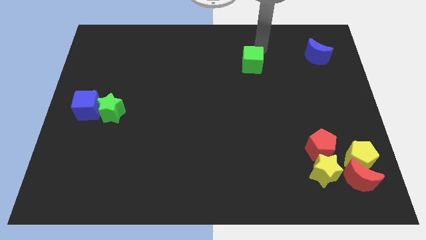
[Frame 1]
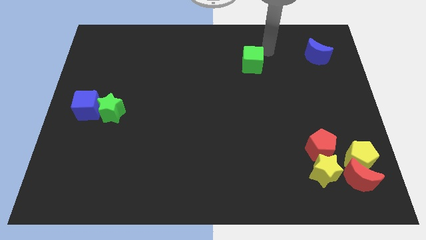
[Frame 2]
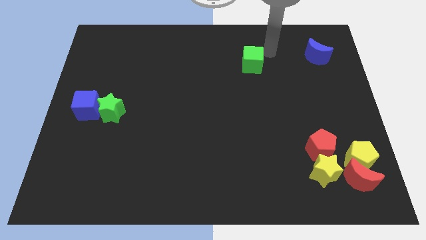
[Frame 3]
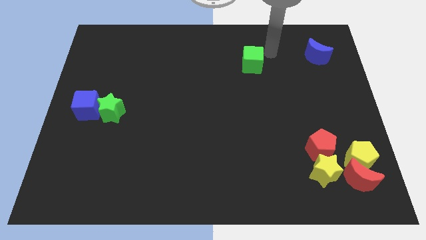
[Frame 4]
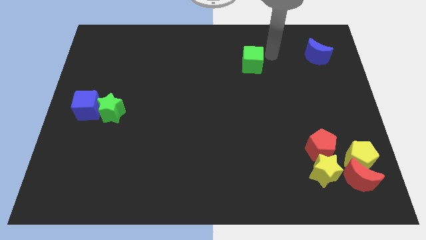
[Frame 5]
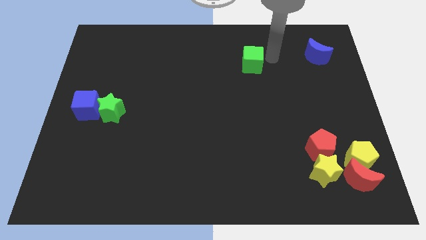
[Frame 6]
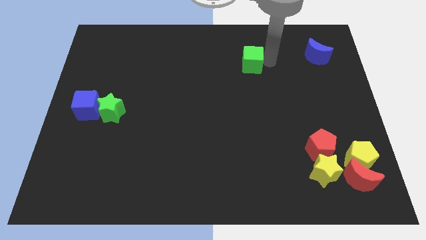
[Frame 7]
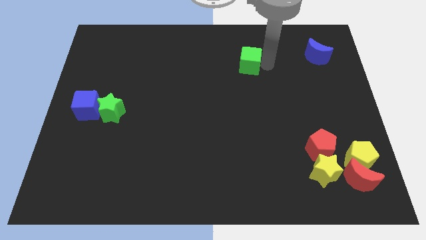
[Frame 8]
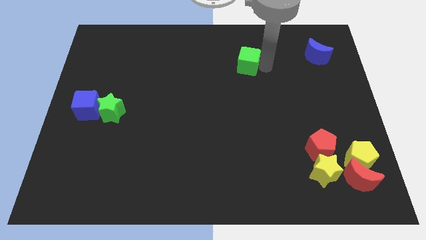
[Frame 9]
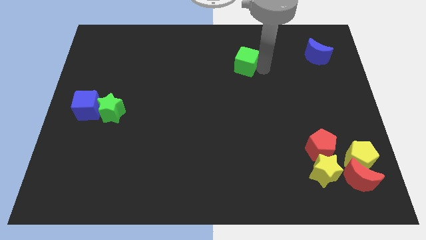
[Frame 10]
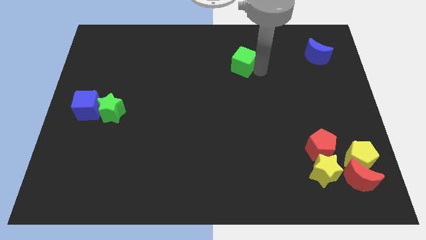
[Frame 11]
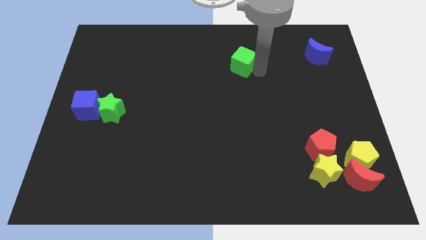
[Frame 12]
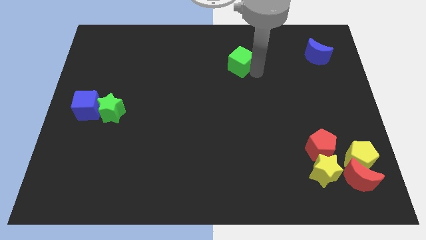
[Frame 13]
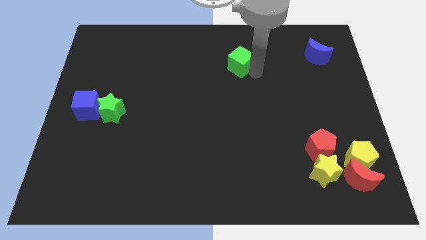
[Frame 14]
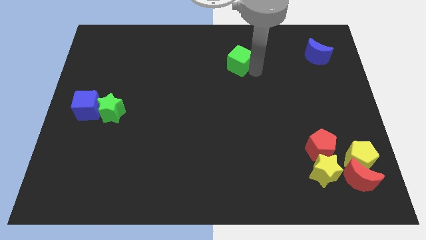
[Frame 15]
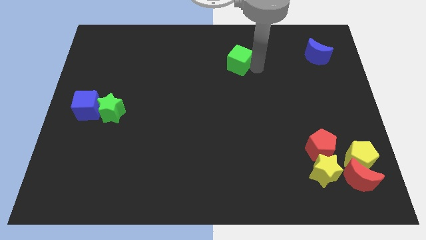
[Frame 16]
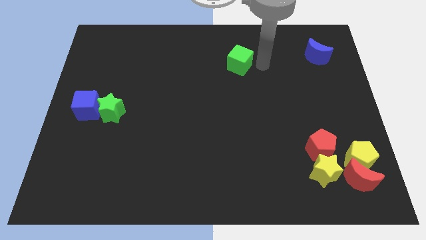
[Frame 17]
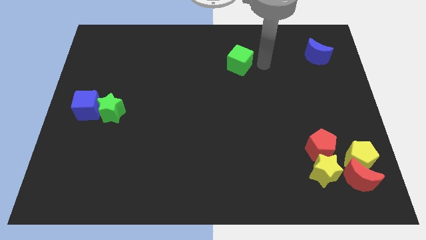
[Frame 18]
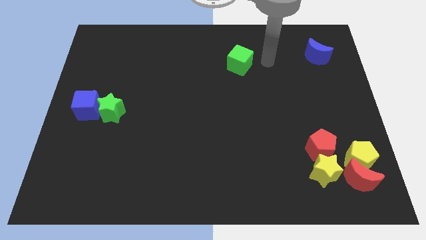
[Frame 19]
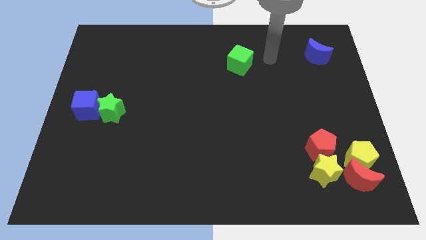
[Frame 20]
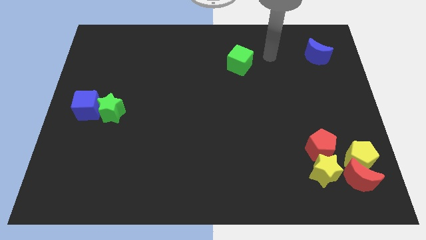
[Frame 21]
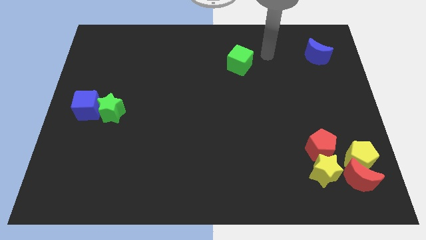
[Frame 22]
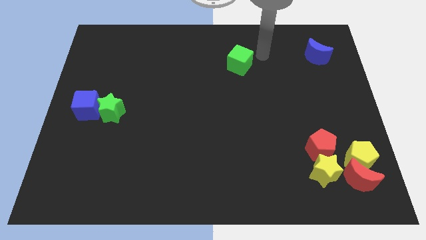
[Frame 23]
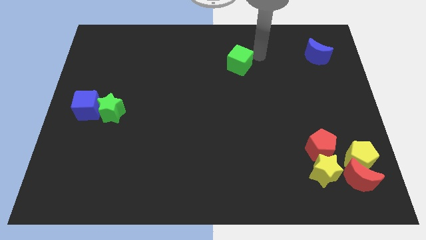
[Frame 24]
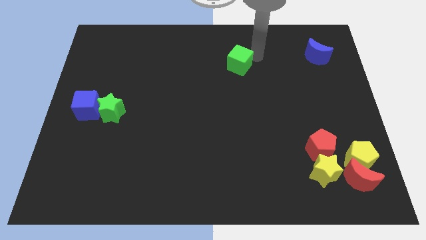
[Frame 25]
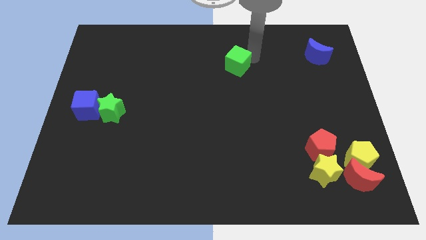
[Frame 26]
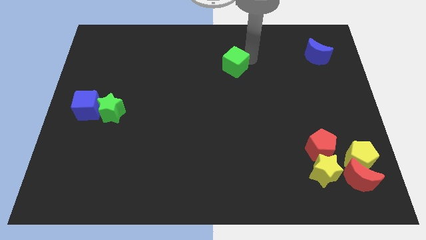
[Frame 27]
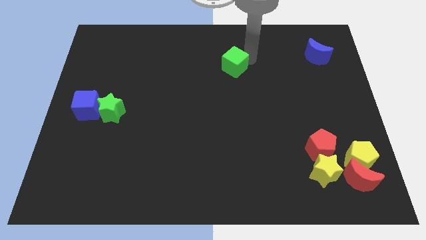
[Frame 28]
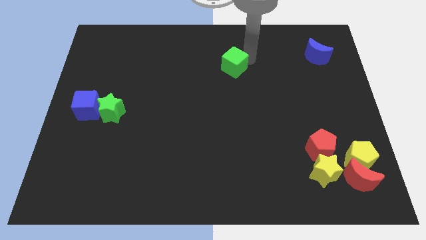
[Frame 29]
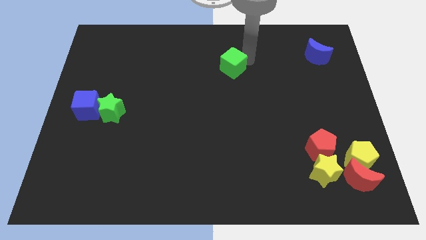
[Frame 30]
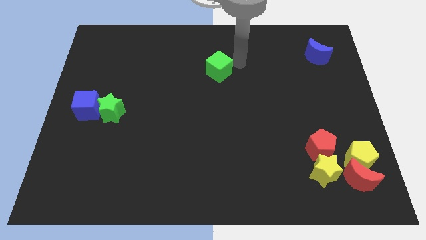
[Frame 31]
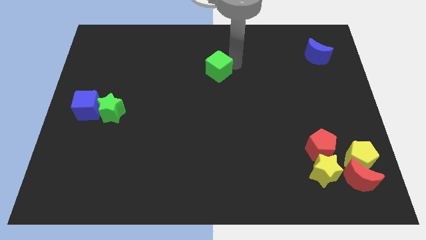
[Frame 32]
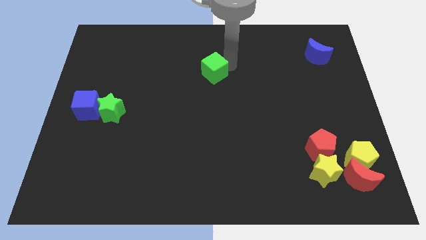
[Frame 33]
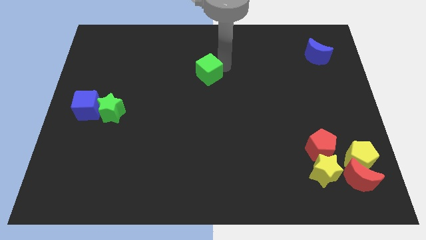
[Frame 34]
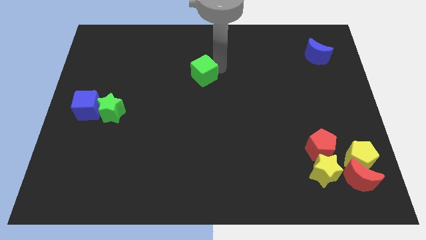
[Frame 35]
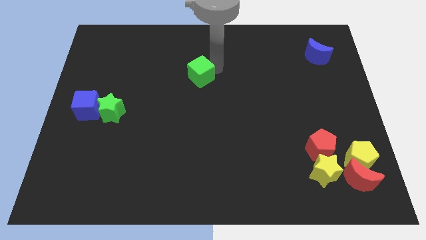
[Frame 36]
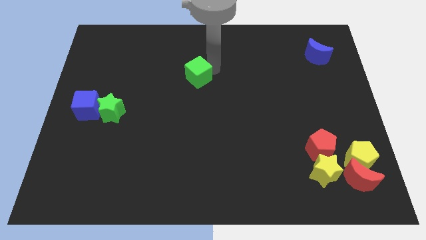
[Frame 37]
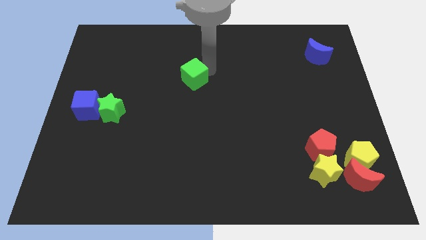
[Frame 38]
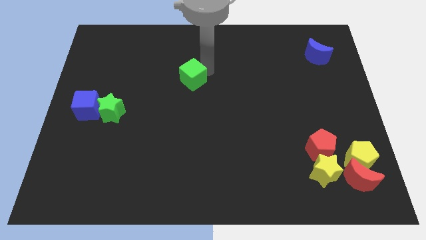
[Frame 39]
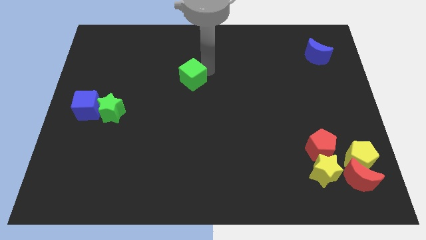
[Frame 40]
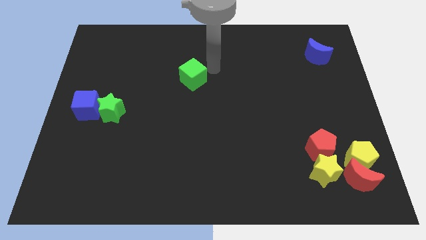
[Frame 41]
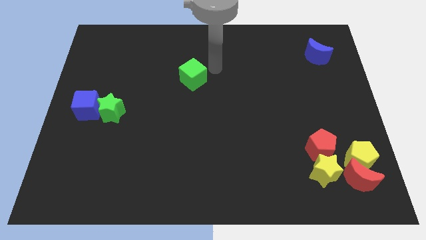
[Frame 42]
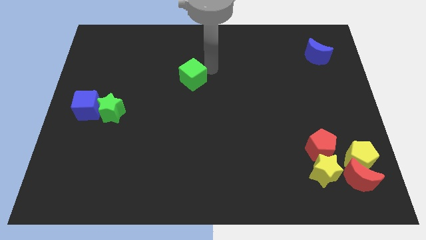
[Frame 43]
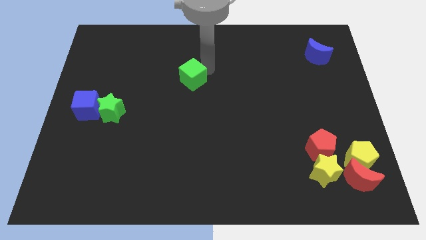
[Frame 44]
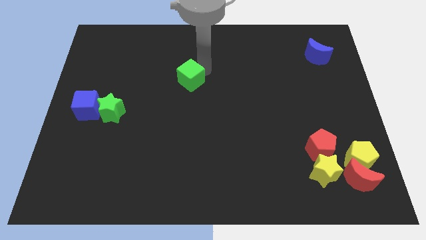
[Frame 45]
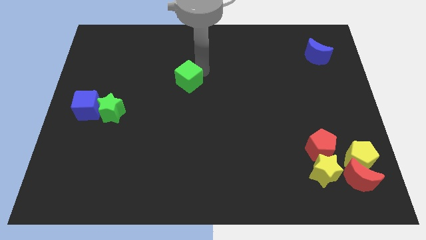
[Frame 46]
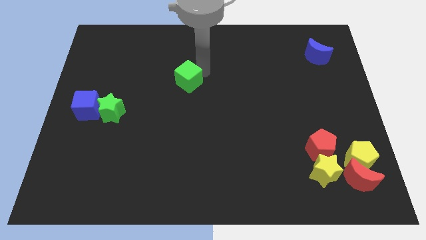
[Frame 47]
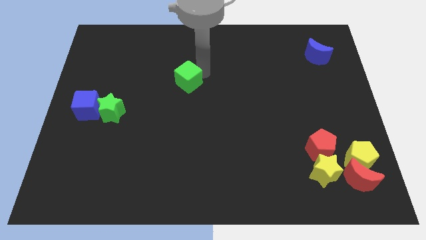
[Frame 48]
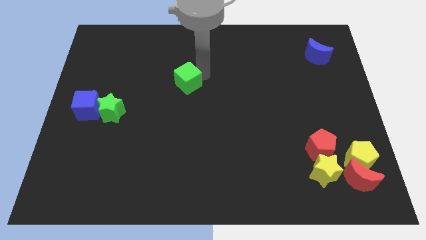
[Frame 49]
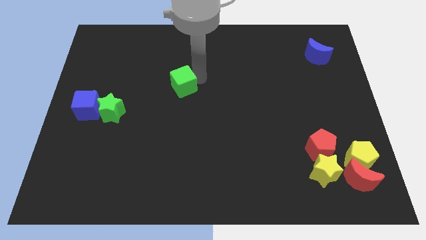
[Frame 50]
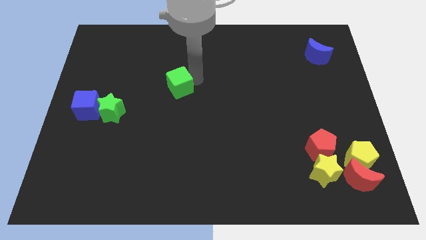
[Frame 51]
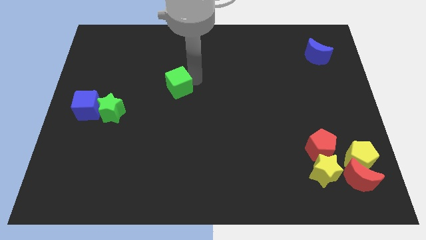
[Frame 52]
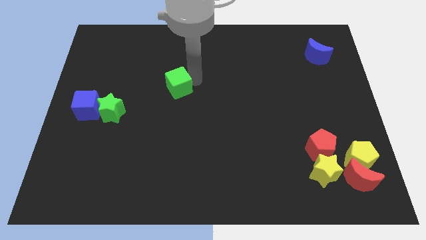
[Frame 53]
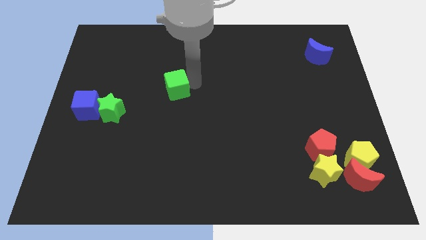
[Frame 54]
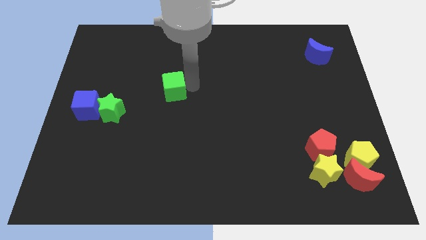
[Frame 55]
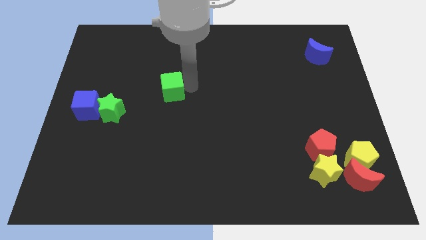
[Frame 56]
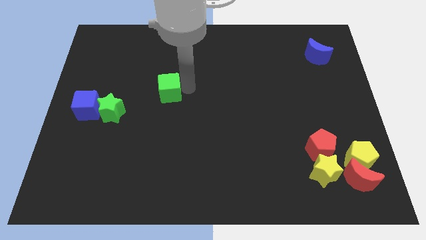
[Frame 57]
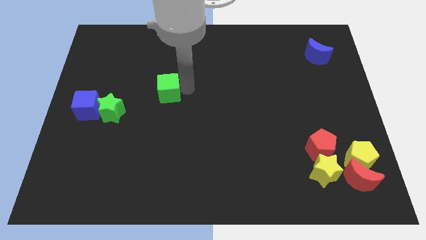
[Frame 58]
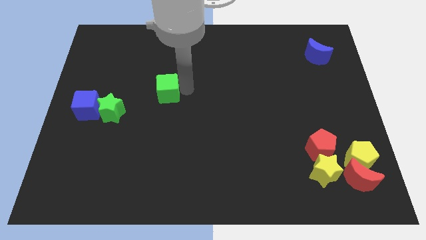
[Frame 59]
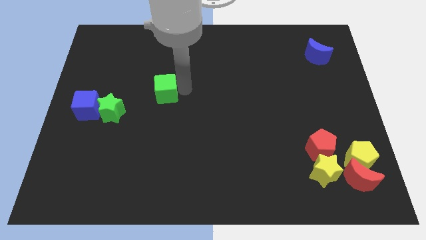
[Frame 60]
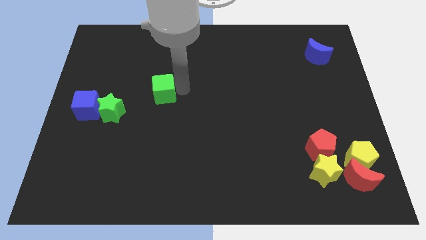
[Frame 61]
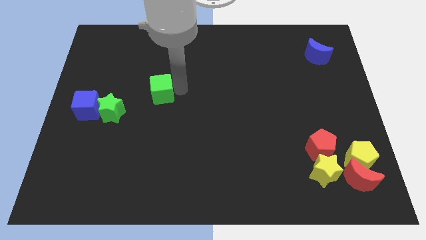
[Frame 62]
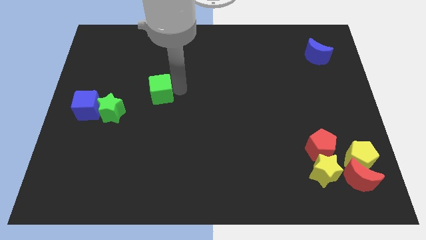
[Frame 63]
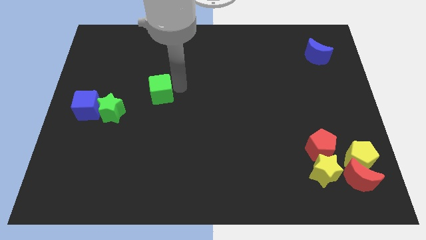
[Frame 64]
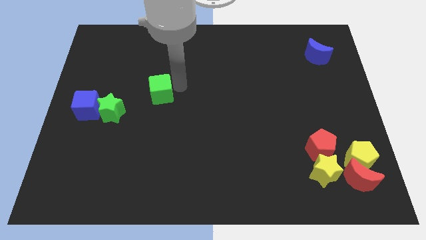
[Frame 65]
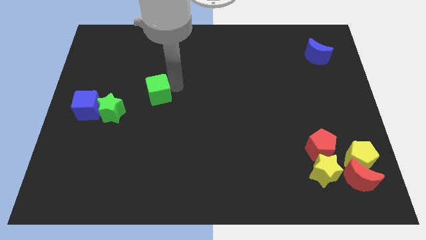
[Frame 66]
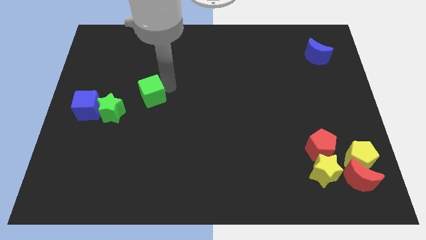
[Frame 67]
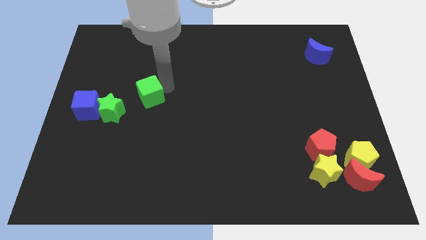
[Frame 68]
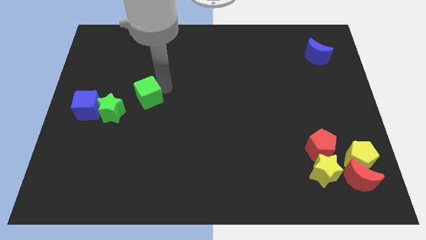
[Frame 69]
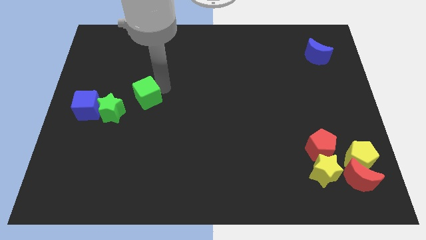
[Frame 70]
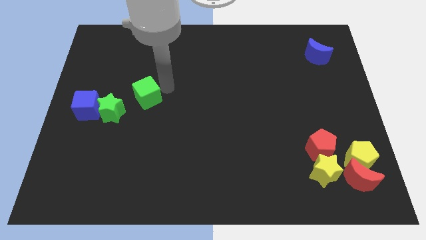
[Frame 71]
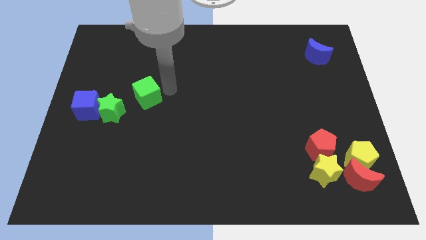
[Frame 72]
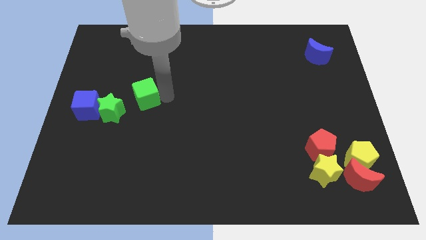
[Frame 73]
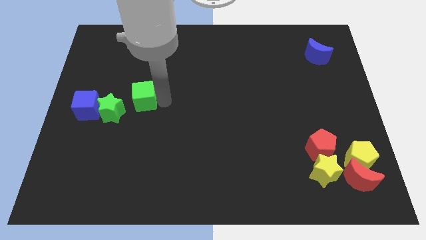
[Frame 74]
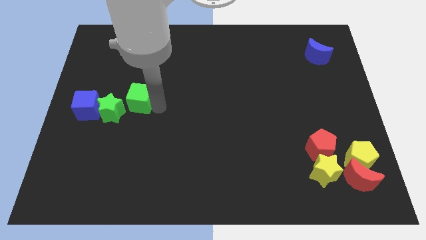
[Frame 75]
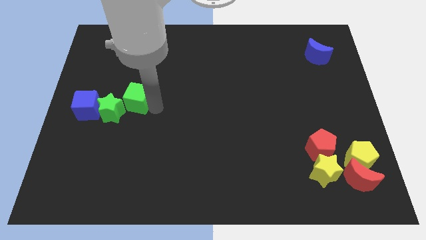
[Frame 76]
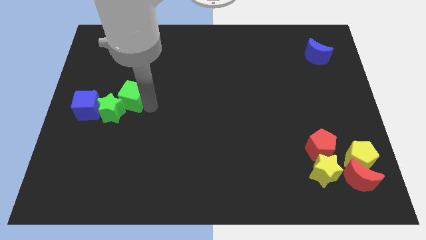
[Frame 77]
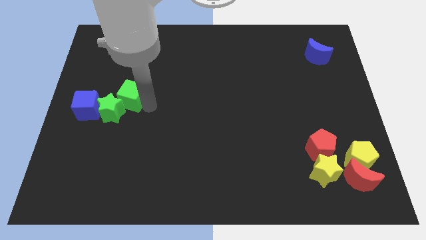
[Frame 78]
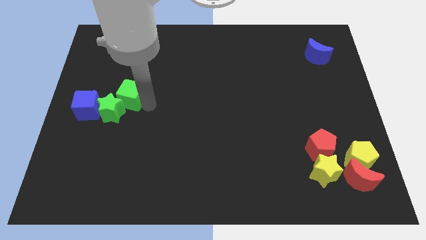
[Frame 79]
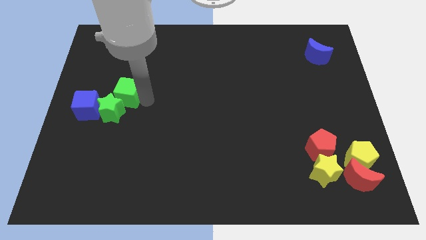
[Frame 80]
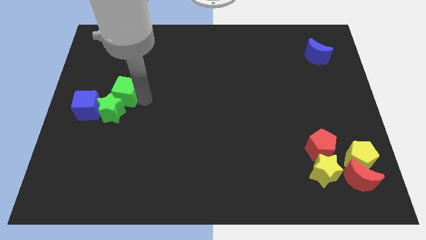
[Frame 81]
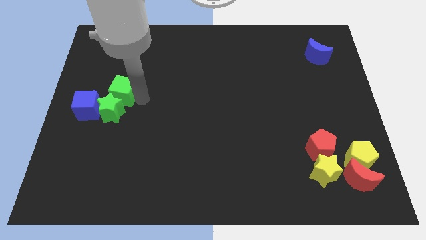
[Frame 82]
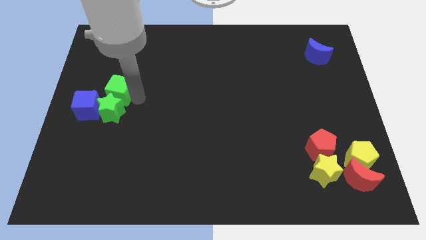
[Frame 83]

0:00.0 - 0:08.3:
move green cube to the top of green star

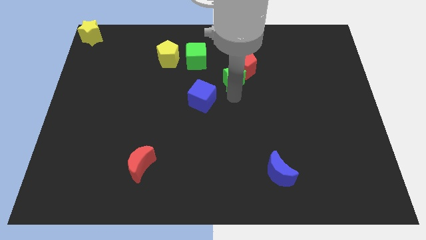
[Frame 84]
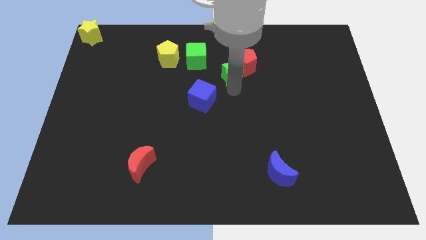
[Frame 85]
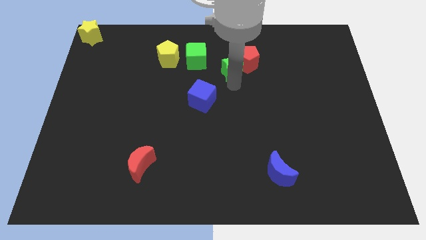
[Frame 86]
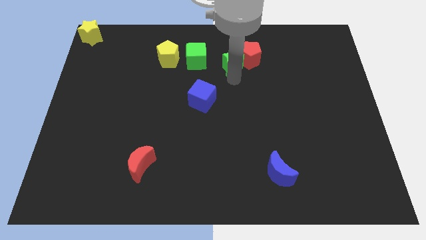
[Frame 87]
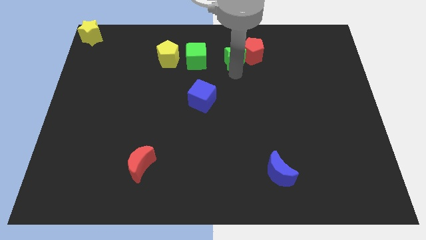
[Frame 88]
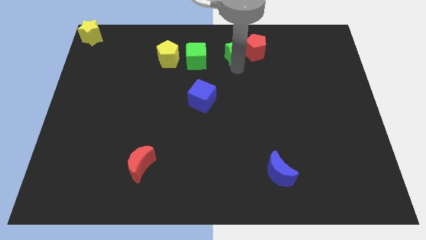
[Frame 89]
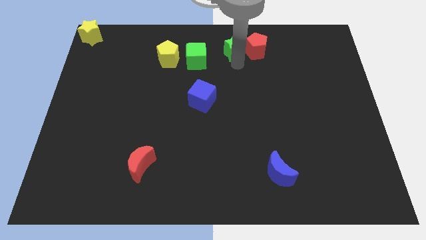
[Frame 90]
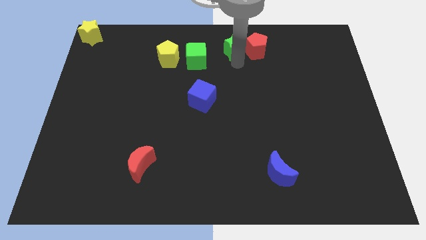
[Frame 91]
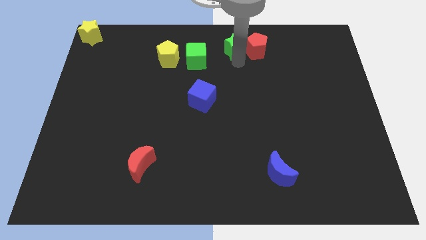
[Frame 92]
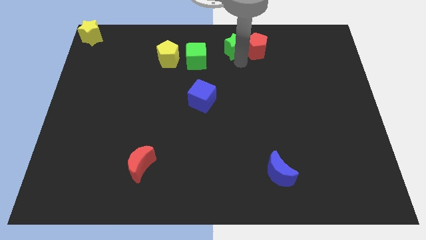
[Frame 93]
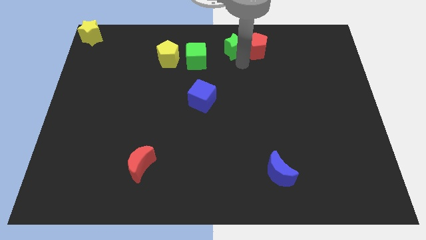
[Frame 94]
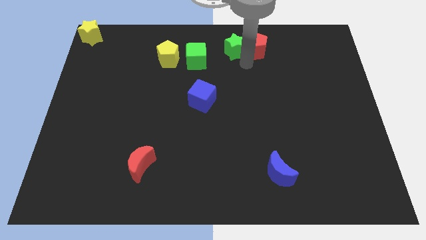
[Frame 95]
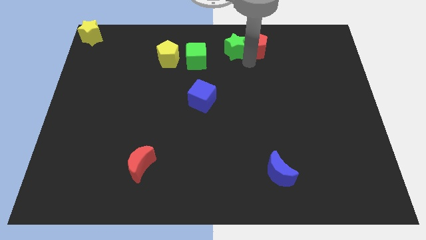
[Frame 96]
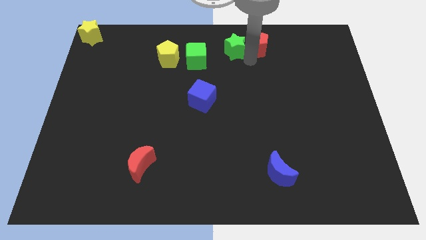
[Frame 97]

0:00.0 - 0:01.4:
place the green star left to the red pentagon
